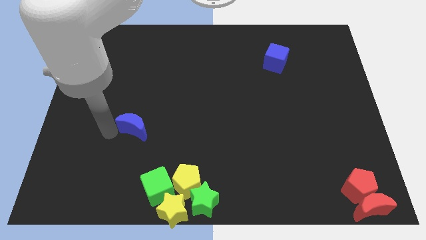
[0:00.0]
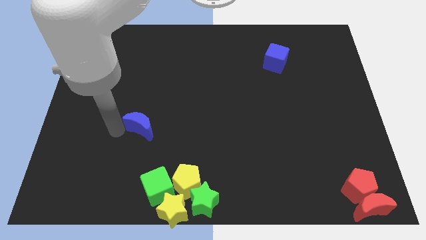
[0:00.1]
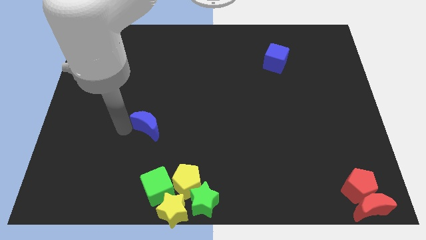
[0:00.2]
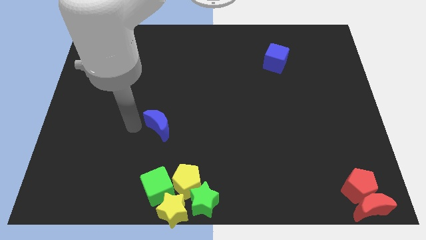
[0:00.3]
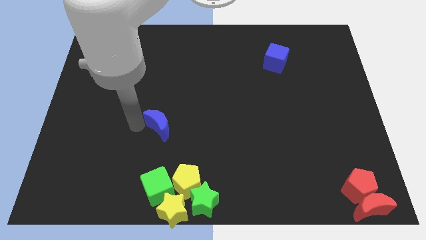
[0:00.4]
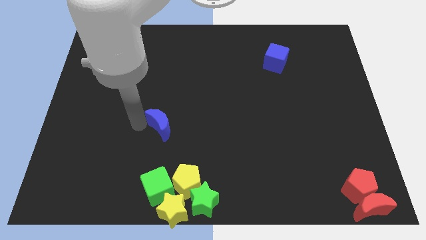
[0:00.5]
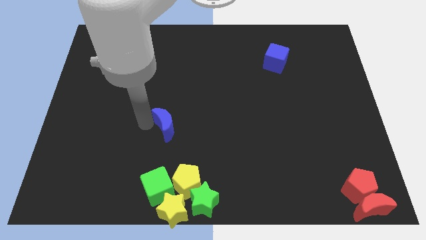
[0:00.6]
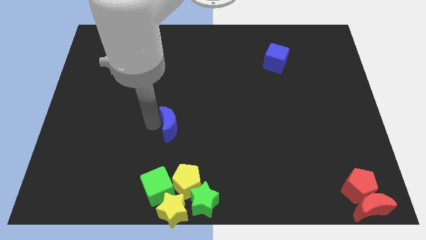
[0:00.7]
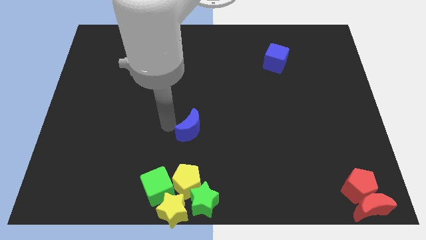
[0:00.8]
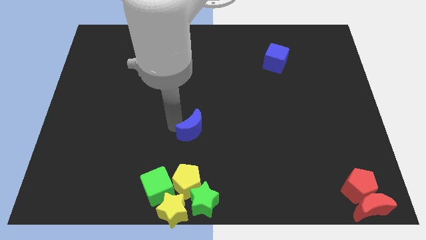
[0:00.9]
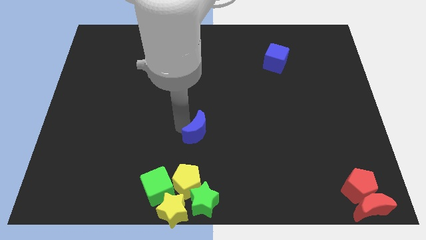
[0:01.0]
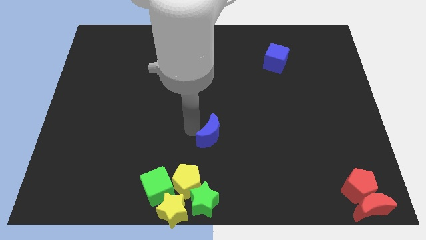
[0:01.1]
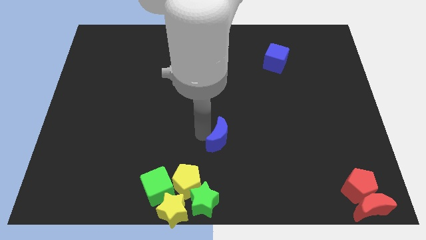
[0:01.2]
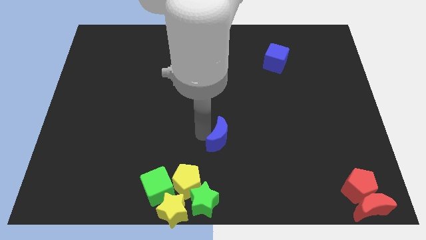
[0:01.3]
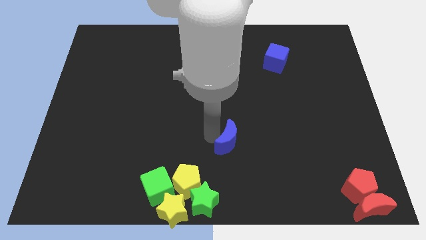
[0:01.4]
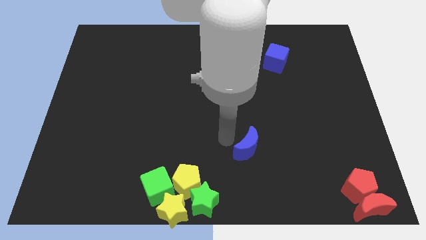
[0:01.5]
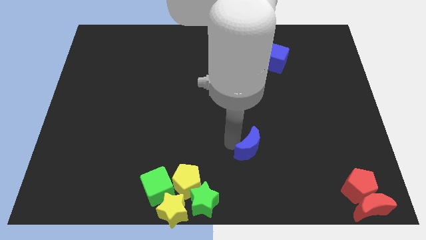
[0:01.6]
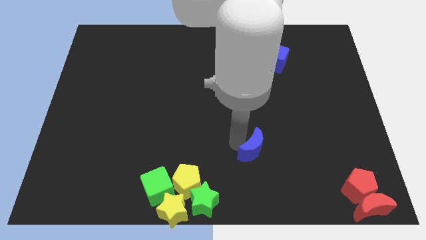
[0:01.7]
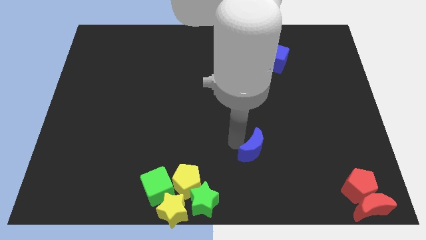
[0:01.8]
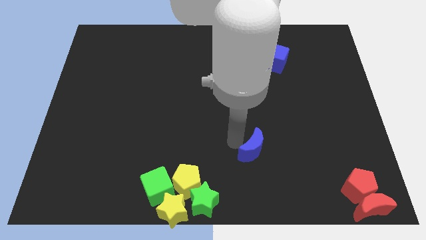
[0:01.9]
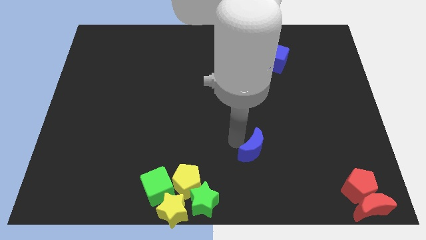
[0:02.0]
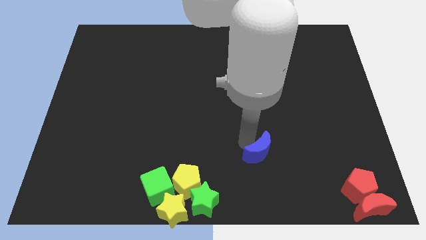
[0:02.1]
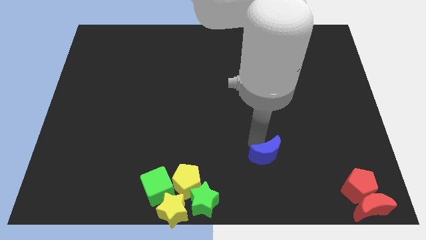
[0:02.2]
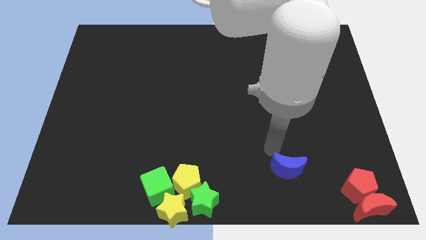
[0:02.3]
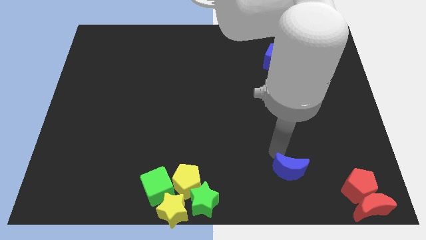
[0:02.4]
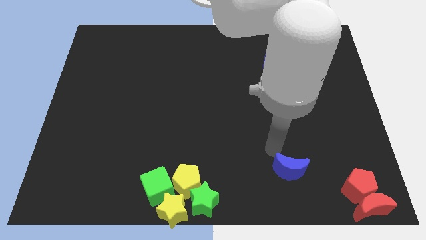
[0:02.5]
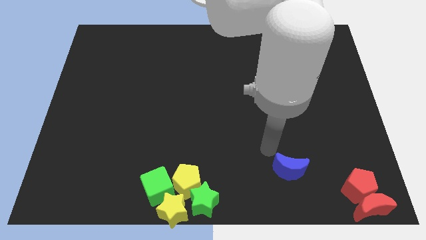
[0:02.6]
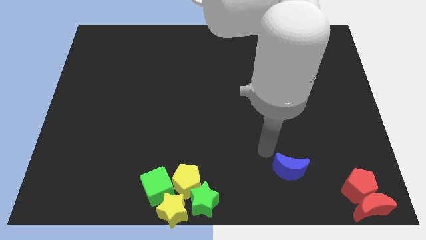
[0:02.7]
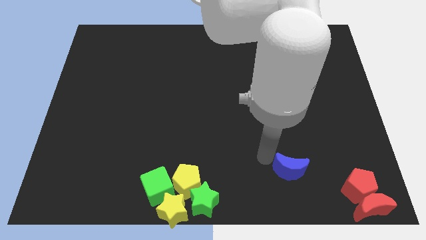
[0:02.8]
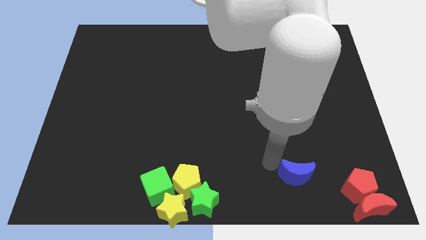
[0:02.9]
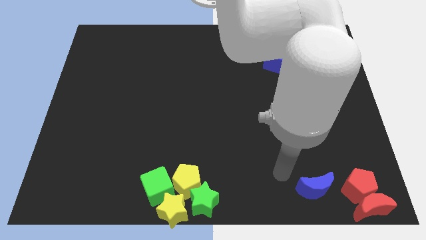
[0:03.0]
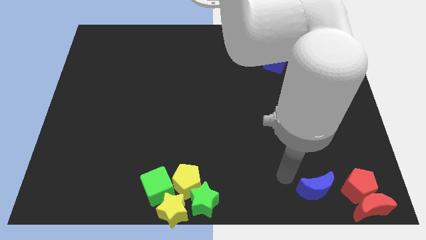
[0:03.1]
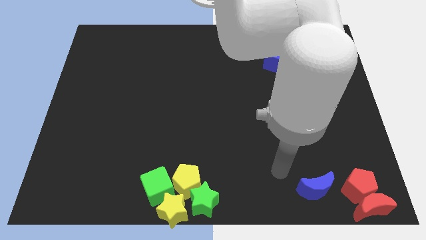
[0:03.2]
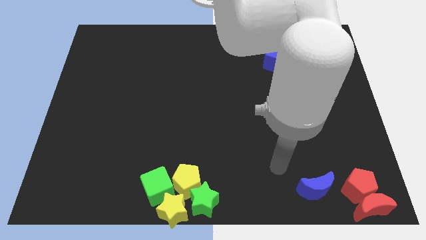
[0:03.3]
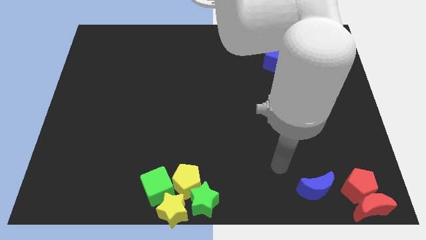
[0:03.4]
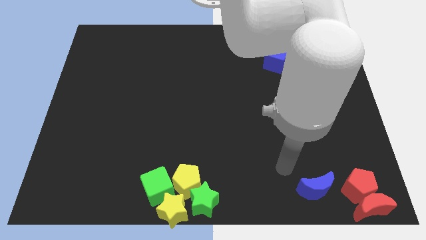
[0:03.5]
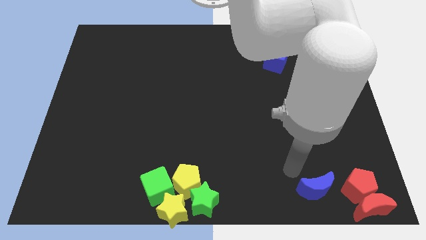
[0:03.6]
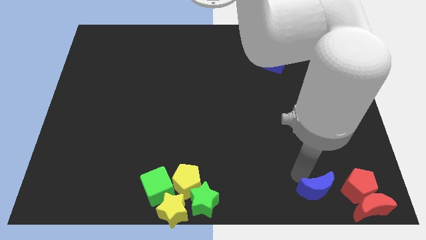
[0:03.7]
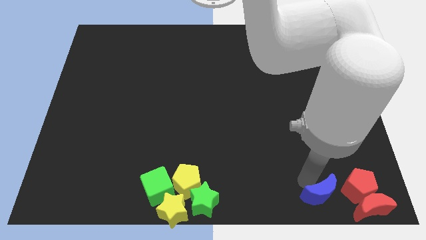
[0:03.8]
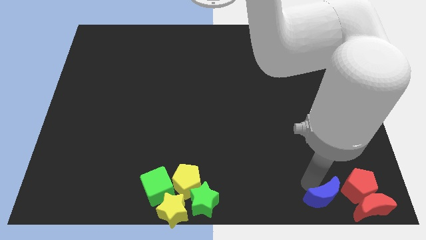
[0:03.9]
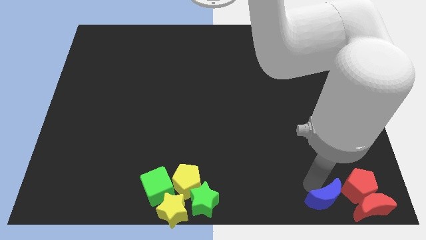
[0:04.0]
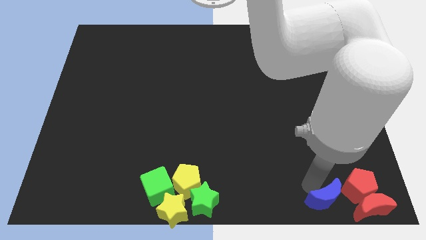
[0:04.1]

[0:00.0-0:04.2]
slide the blue moon left to the red pentagon

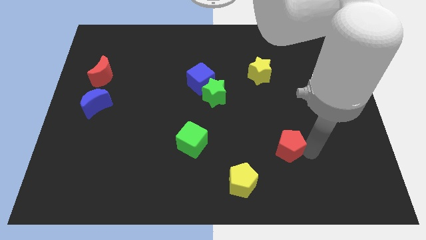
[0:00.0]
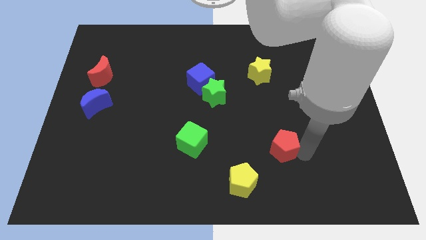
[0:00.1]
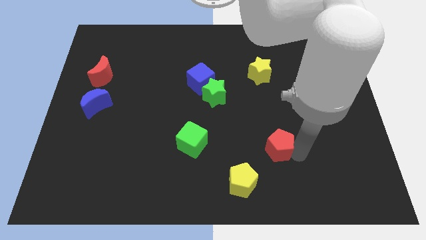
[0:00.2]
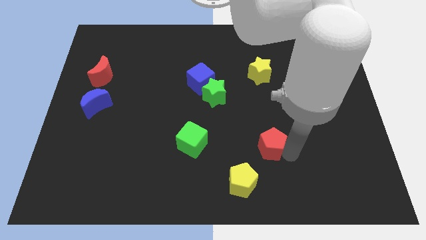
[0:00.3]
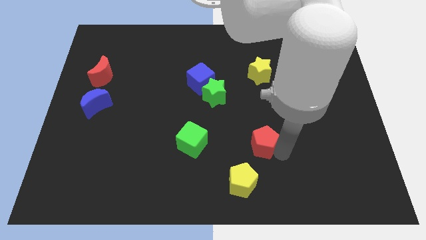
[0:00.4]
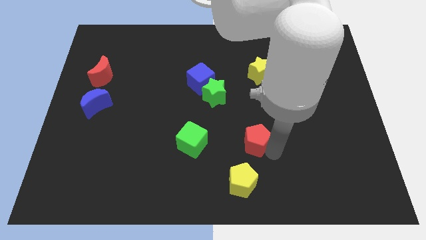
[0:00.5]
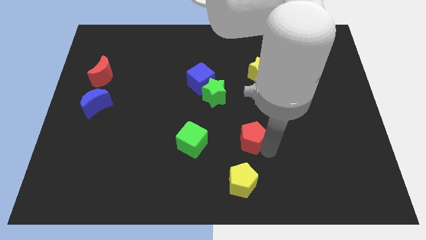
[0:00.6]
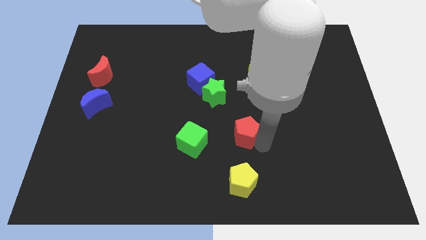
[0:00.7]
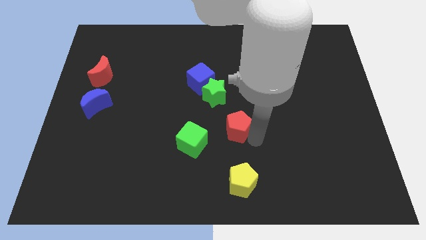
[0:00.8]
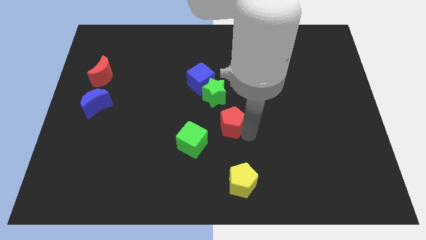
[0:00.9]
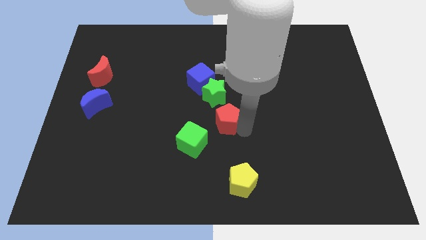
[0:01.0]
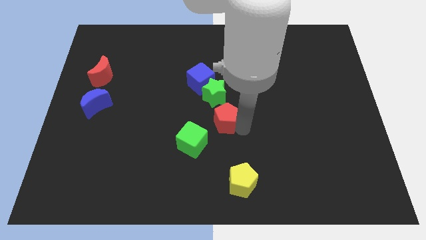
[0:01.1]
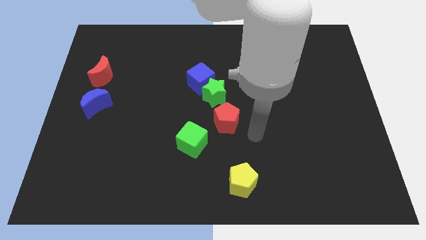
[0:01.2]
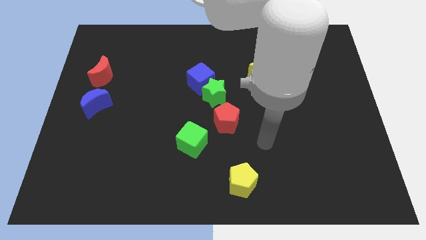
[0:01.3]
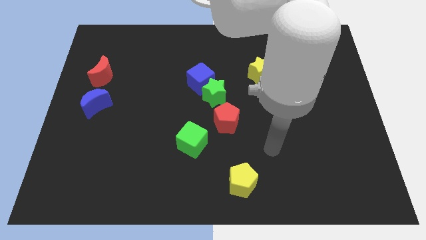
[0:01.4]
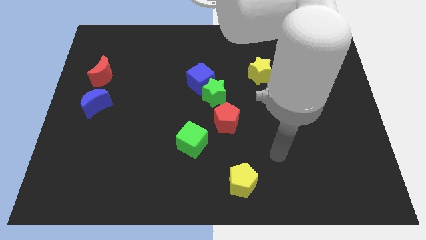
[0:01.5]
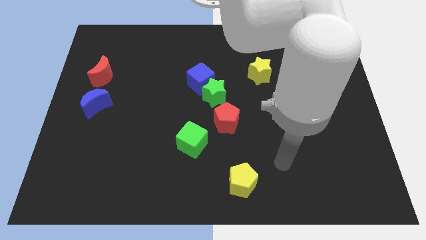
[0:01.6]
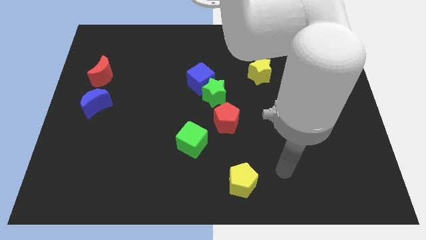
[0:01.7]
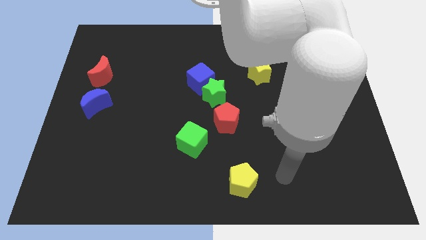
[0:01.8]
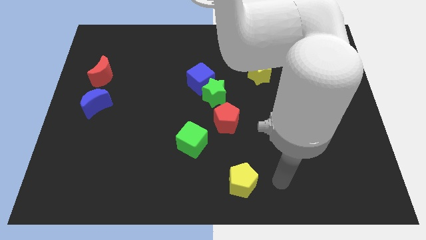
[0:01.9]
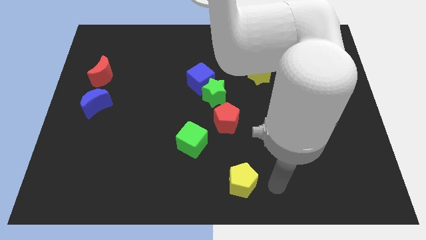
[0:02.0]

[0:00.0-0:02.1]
push the red pentagon to the center of the board

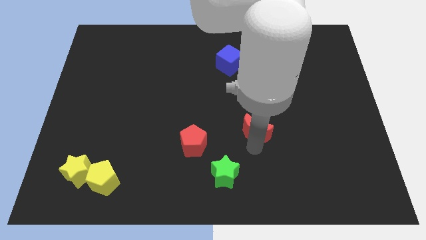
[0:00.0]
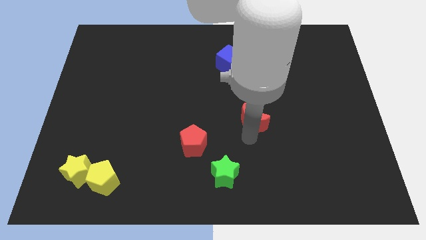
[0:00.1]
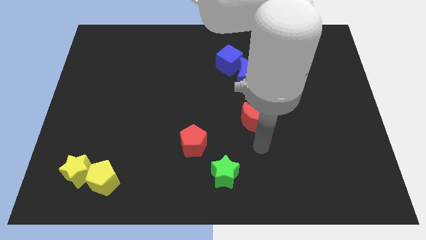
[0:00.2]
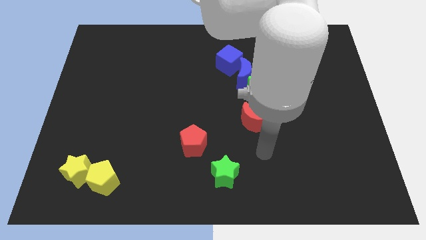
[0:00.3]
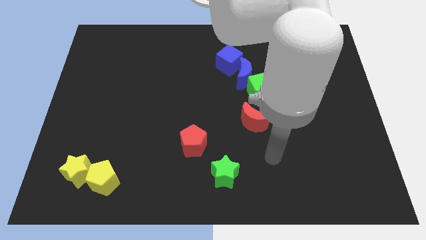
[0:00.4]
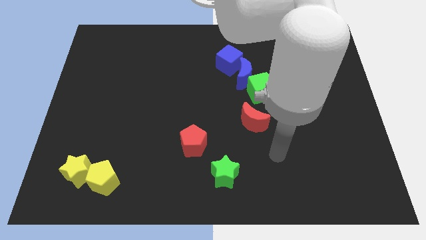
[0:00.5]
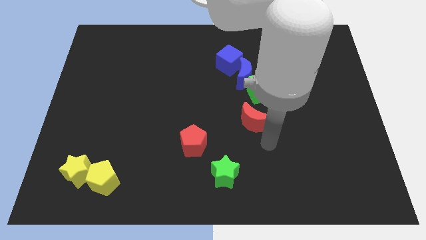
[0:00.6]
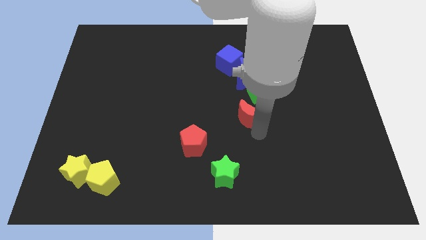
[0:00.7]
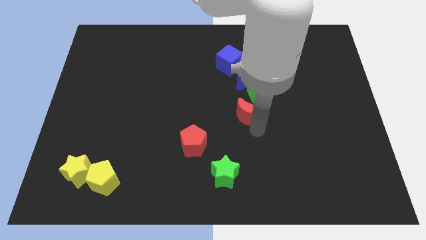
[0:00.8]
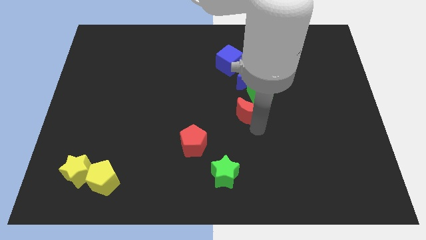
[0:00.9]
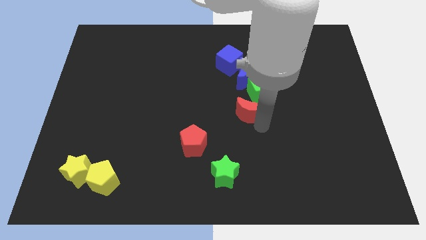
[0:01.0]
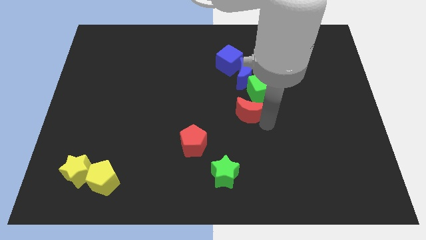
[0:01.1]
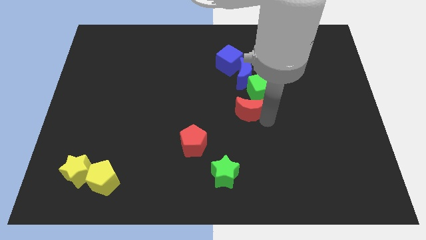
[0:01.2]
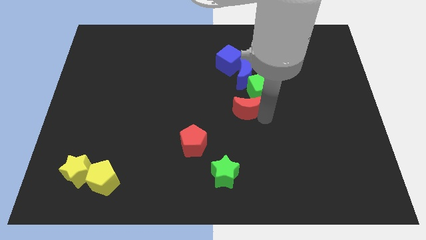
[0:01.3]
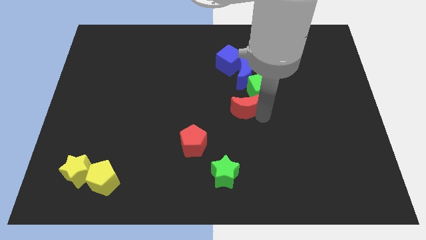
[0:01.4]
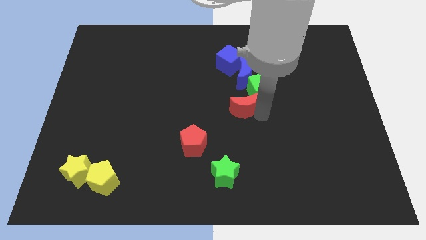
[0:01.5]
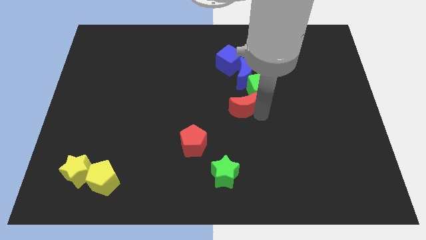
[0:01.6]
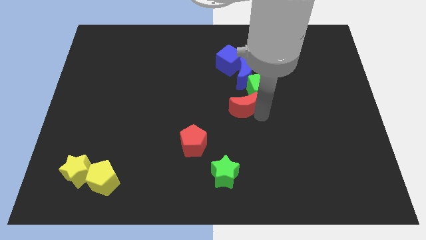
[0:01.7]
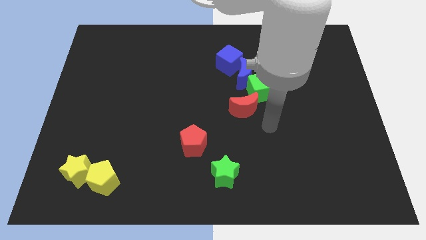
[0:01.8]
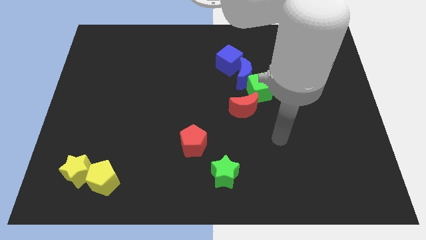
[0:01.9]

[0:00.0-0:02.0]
place the red crescent close to the green cube

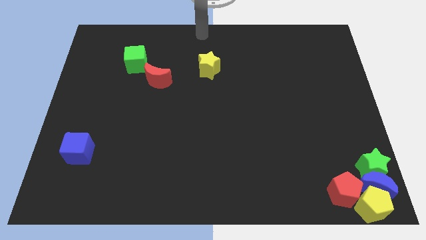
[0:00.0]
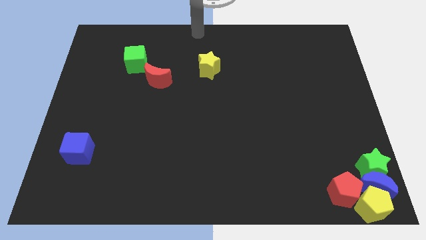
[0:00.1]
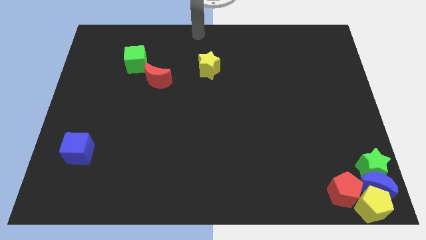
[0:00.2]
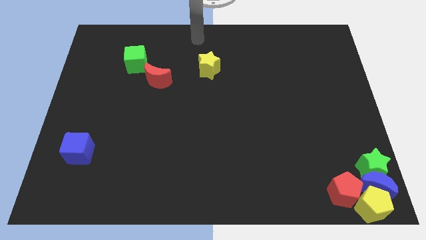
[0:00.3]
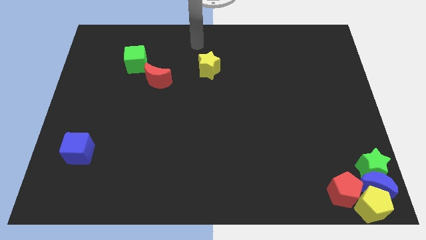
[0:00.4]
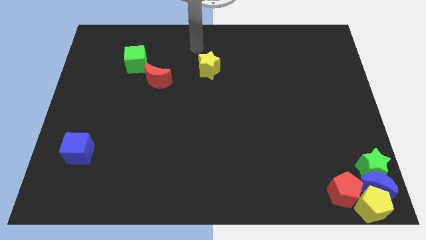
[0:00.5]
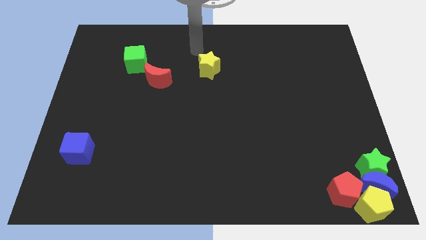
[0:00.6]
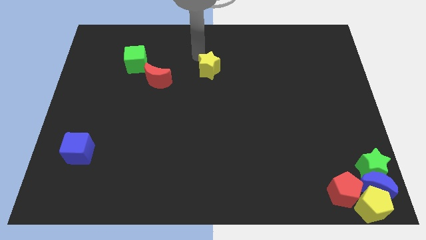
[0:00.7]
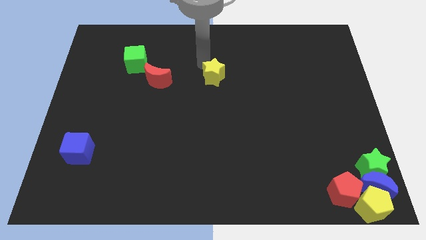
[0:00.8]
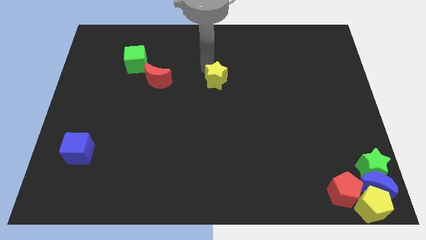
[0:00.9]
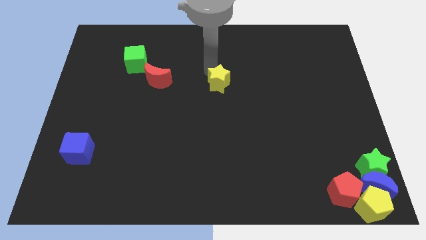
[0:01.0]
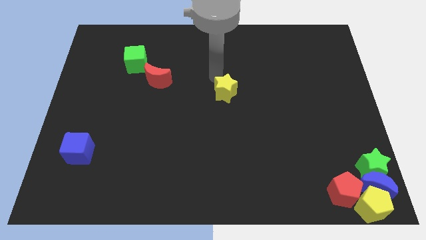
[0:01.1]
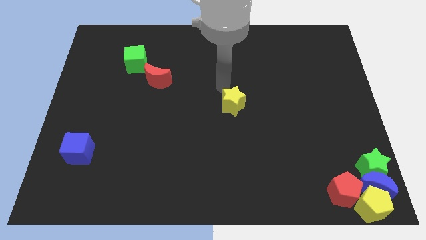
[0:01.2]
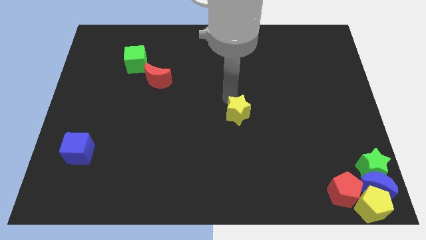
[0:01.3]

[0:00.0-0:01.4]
push the yellow star towards the center of the board
